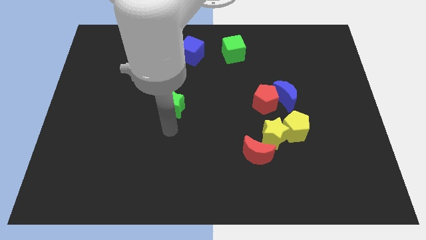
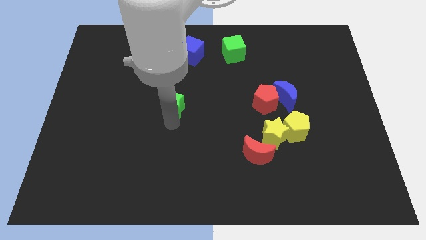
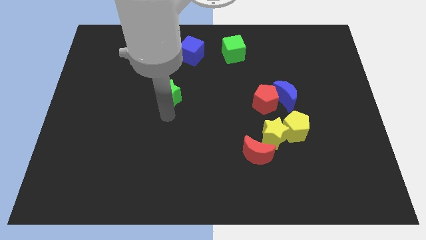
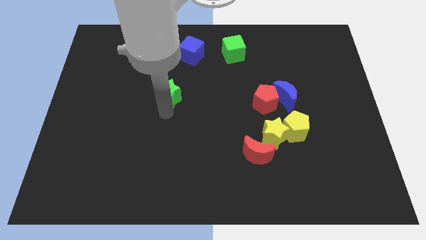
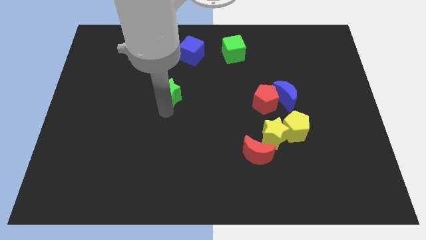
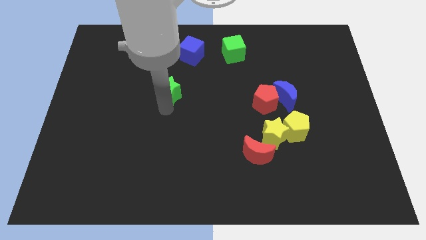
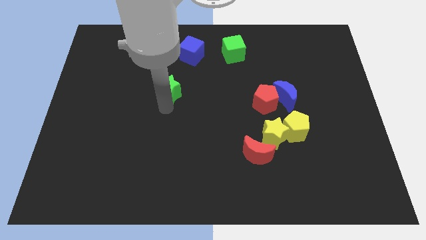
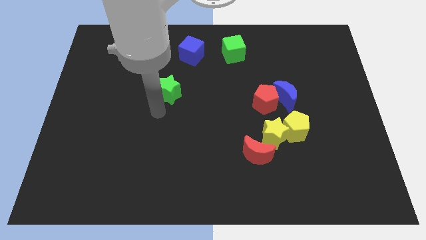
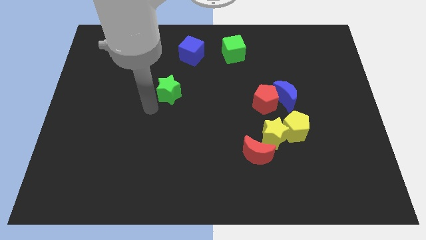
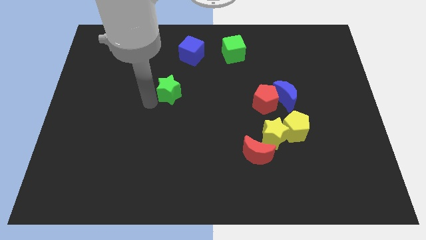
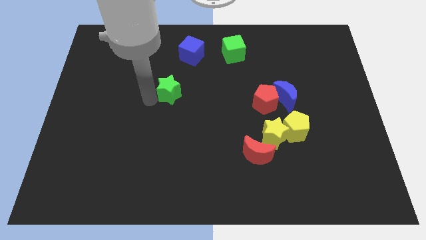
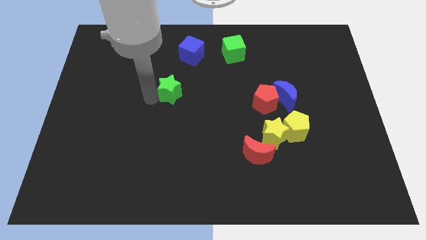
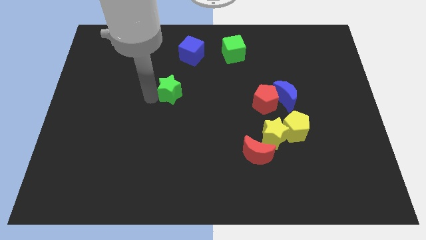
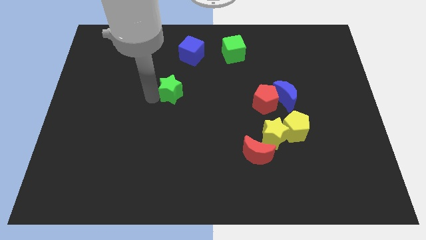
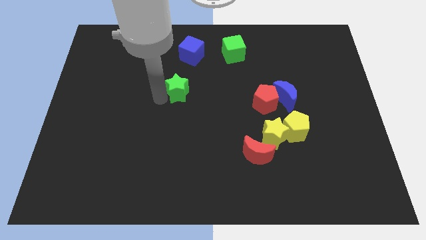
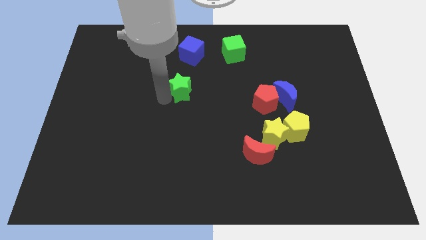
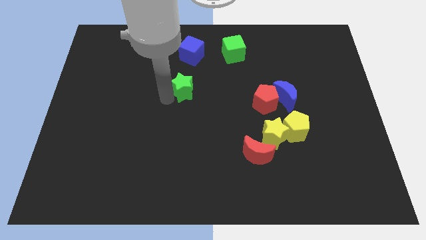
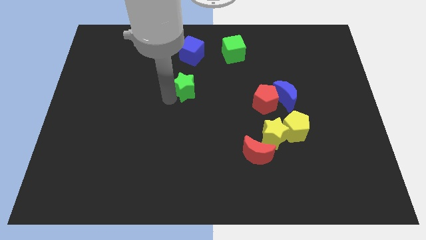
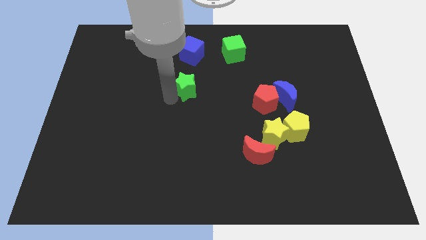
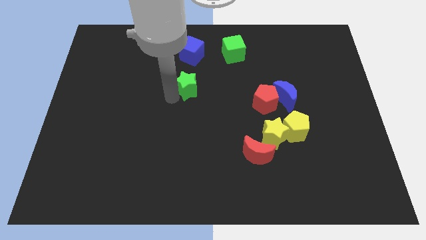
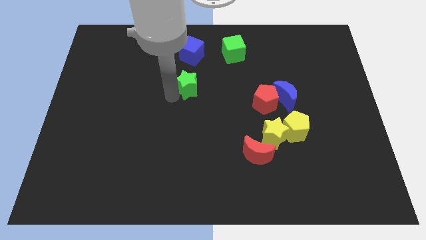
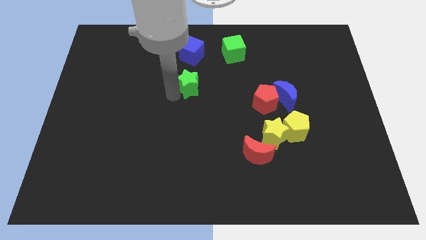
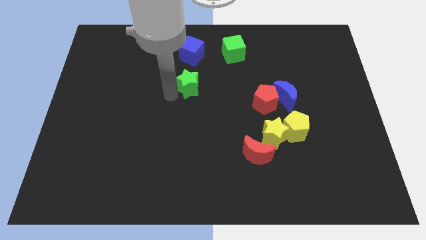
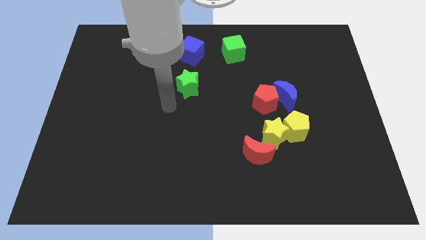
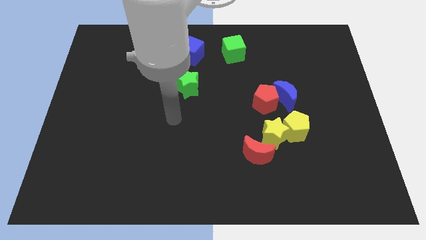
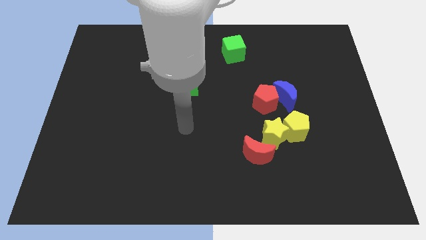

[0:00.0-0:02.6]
move the green star into the blue cube

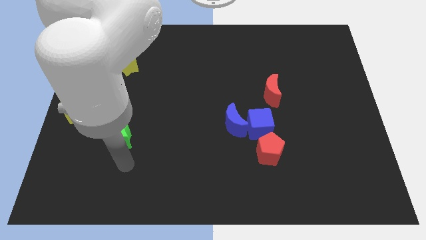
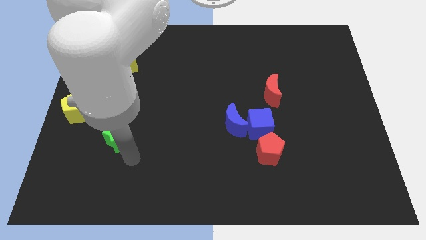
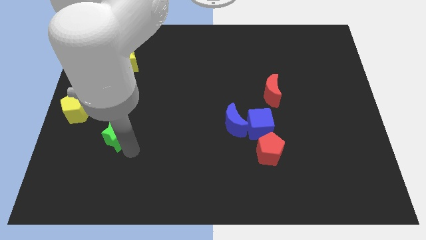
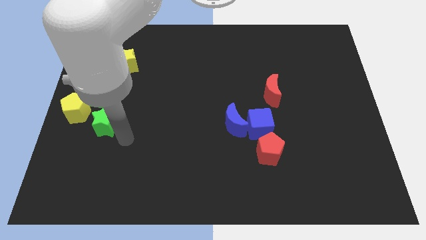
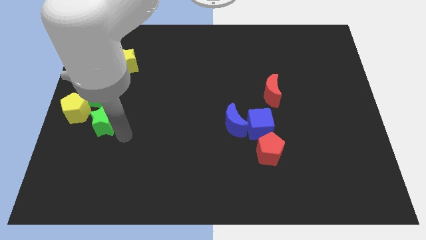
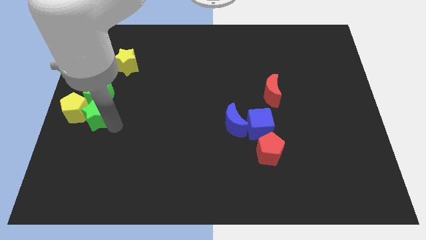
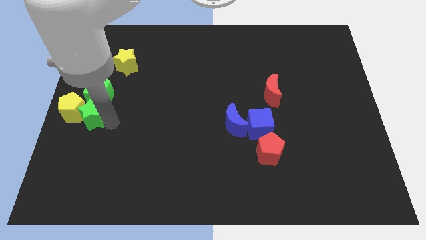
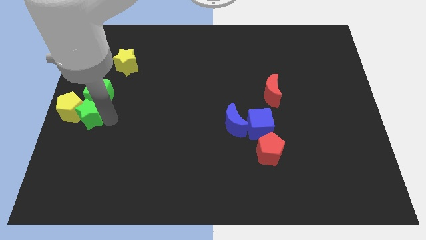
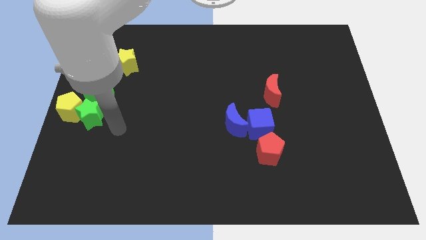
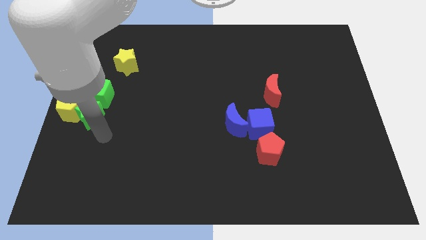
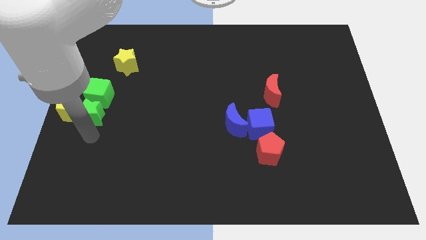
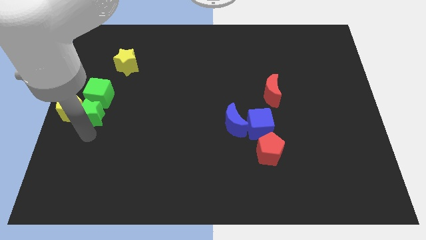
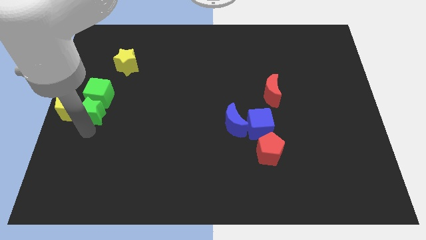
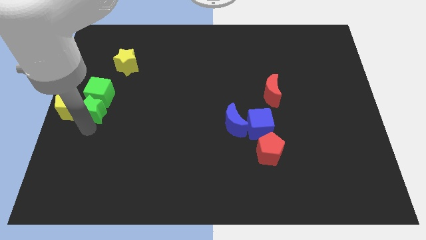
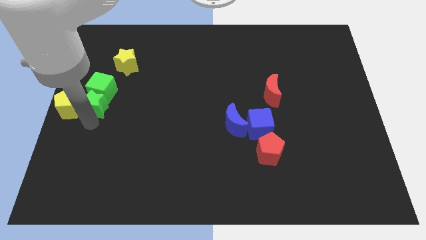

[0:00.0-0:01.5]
push the green star into the green cube

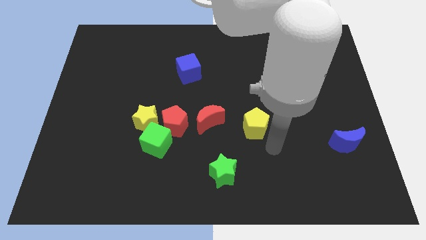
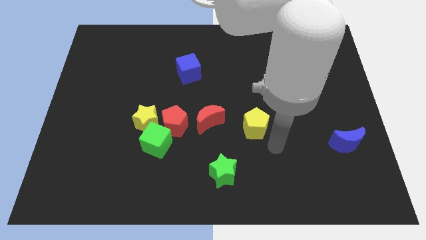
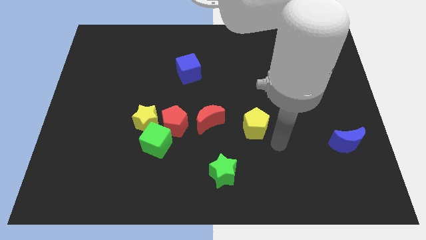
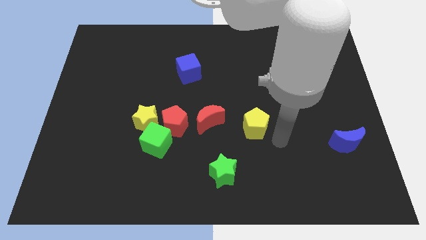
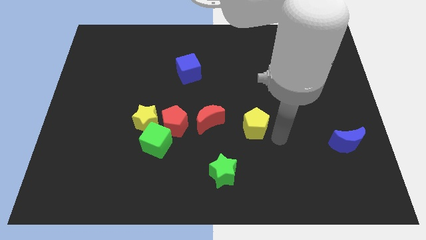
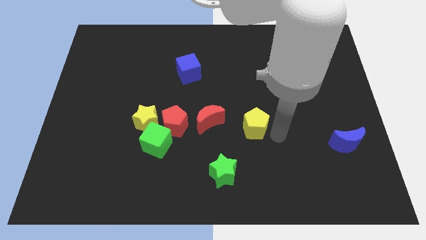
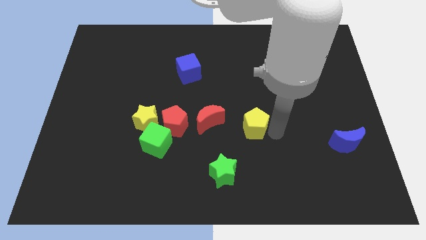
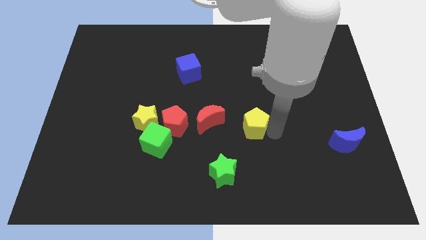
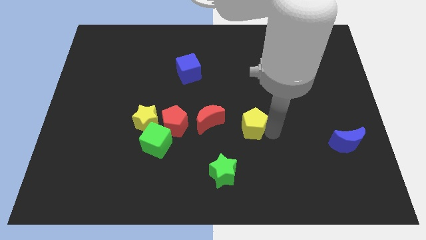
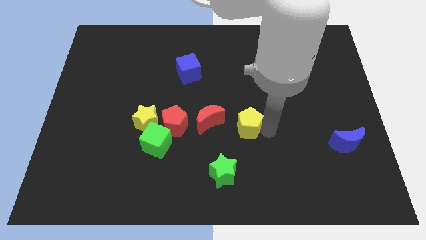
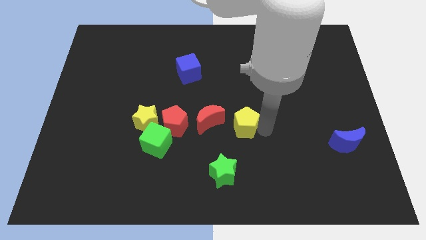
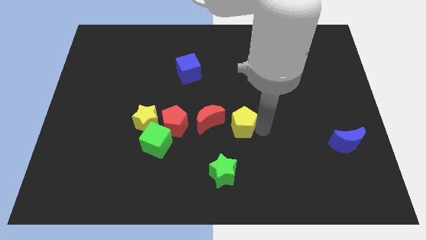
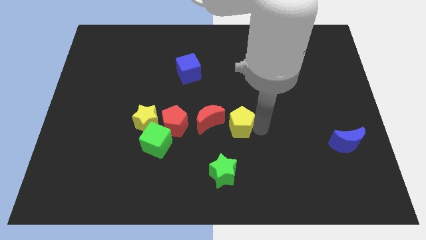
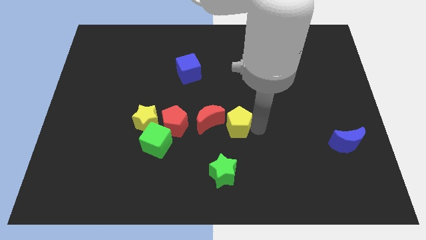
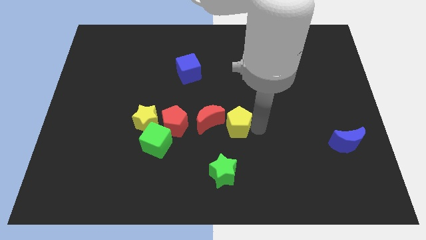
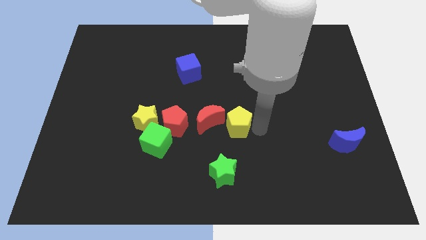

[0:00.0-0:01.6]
place the yellow pentagon adjacent to the red moon

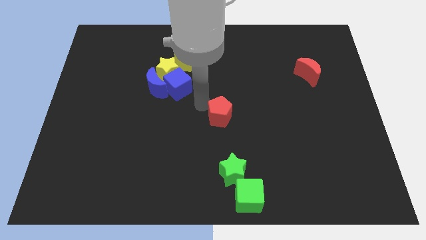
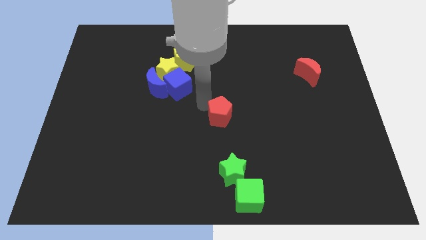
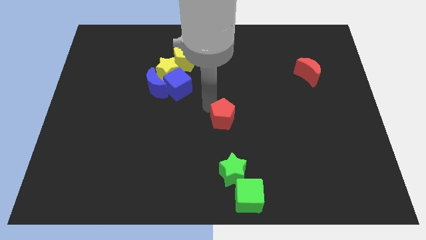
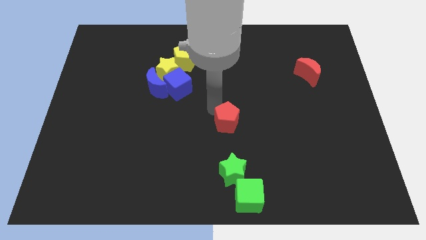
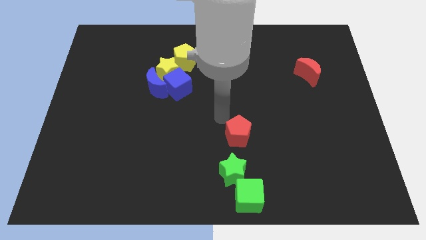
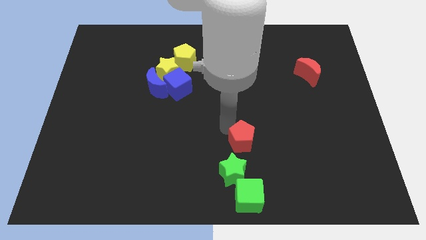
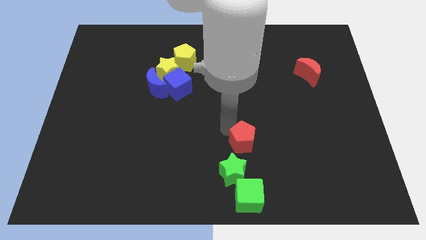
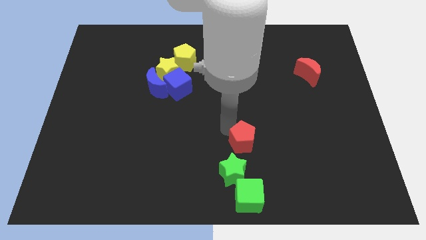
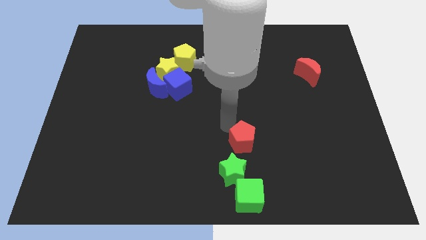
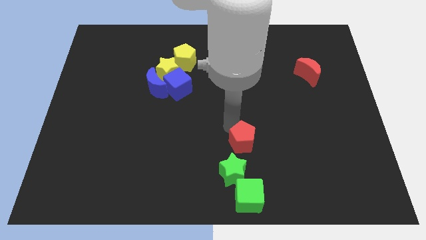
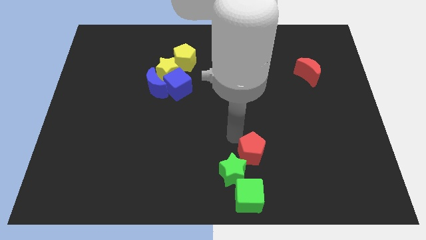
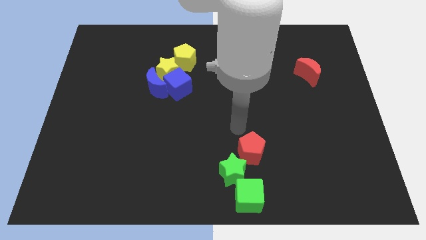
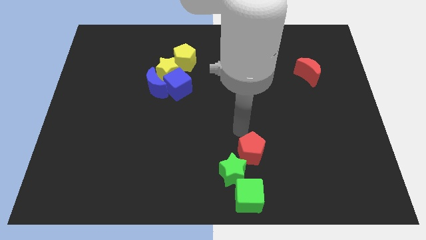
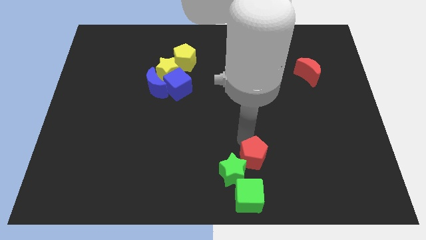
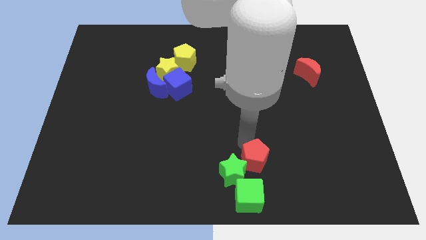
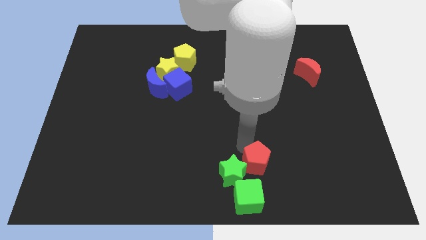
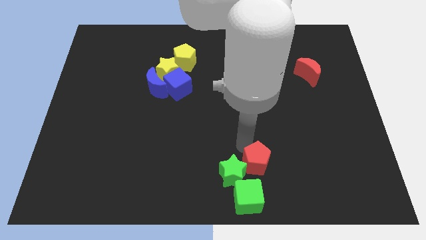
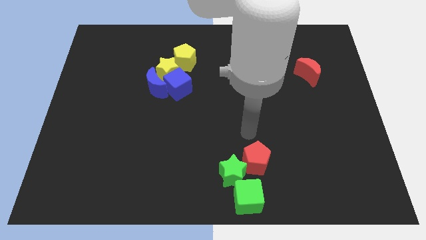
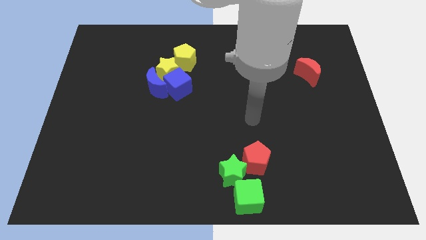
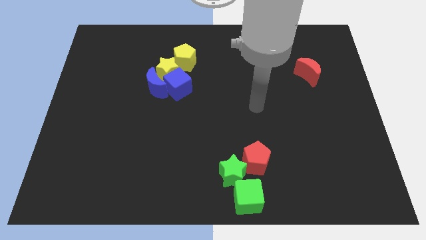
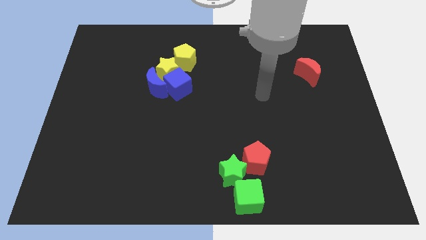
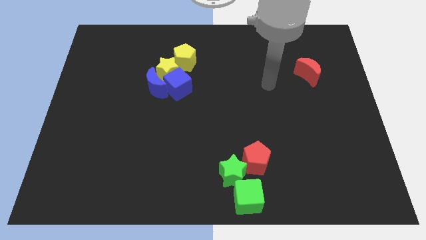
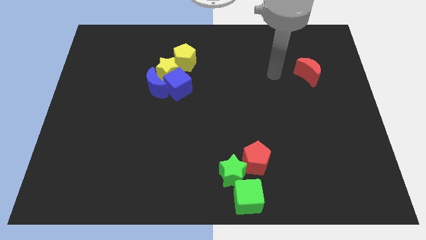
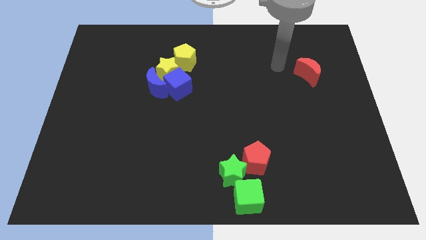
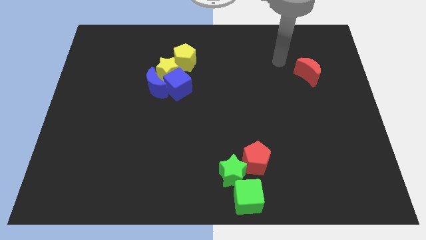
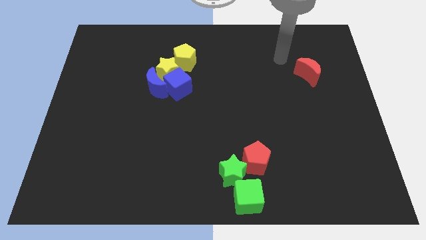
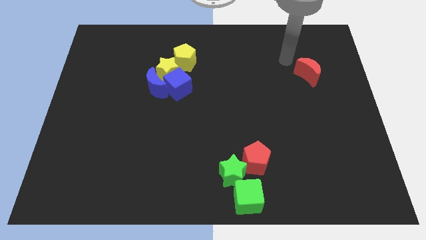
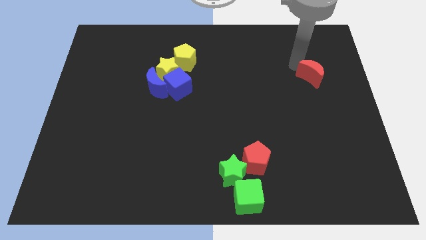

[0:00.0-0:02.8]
move red pentagon into green star

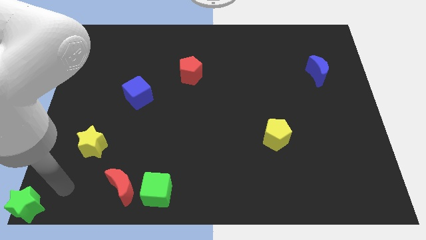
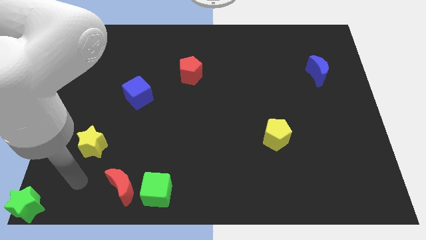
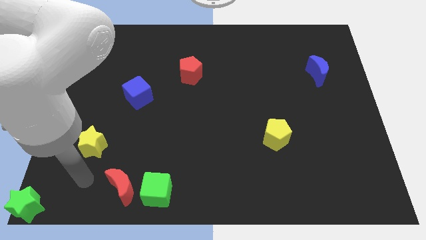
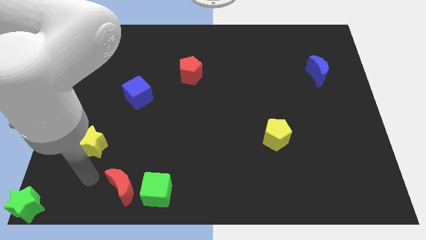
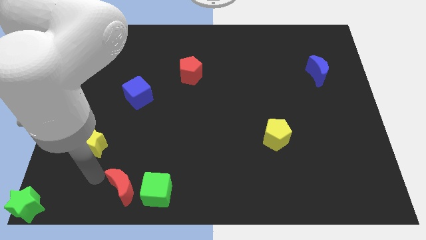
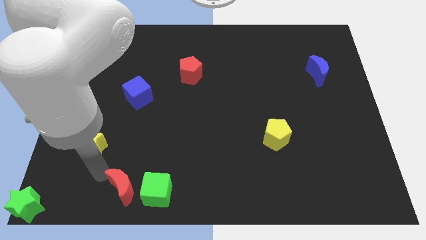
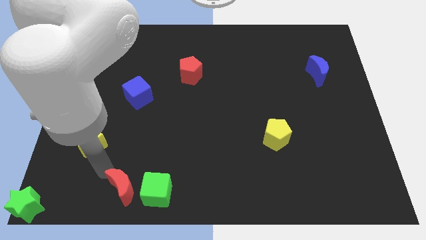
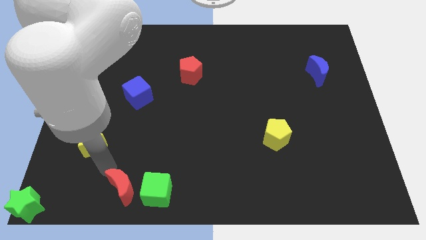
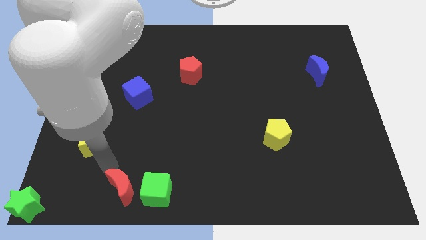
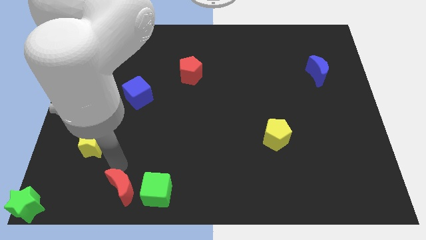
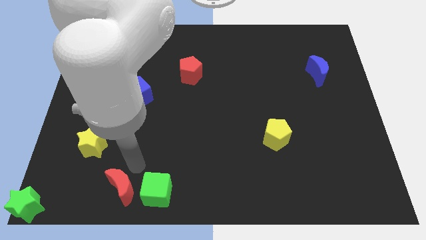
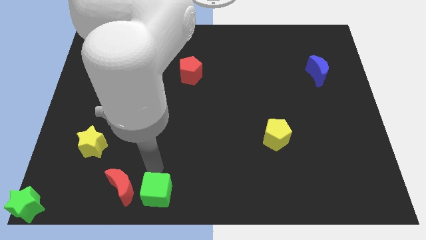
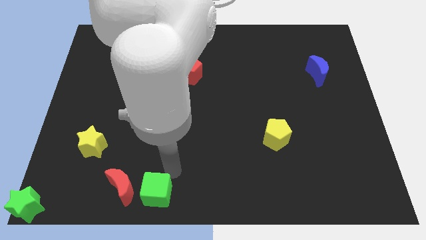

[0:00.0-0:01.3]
place your arm at the top of the green cube
